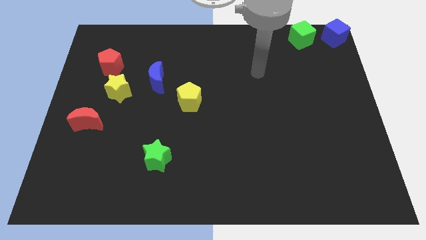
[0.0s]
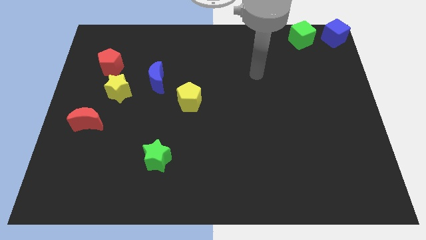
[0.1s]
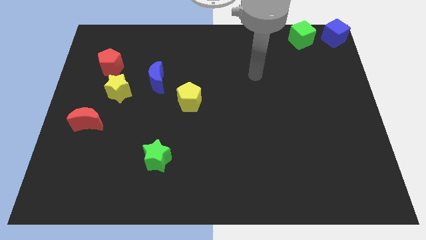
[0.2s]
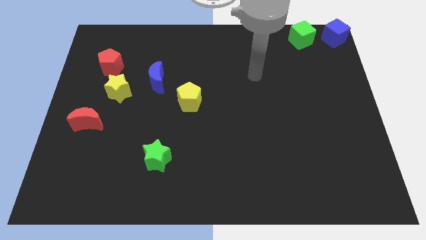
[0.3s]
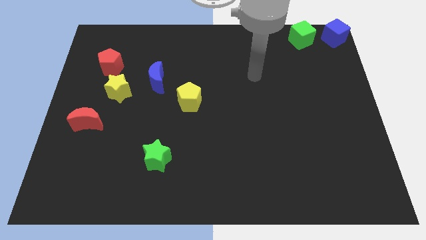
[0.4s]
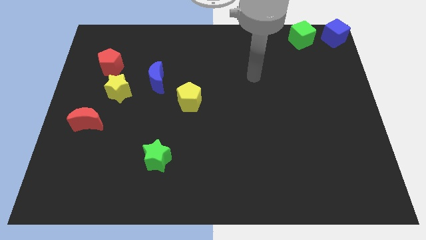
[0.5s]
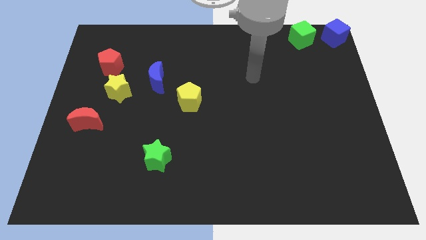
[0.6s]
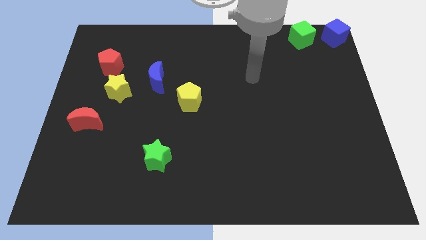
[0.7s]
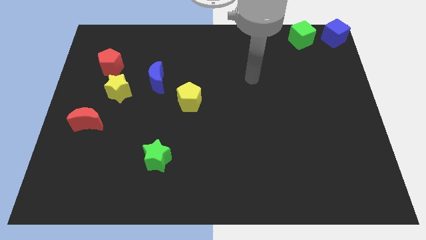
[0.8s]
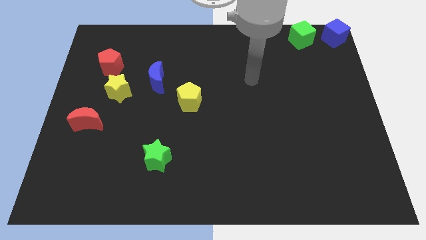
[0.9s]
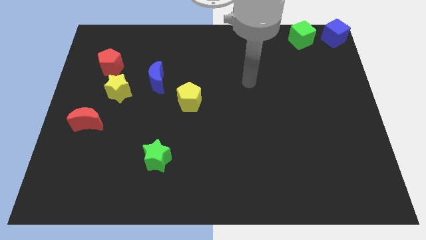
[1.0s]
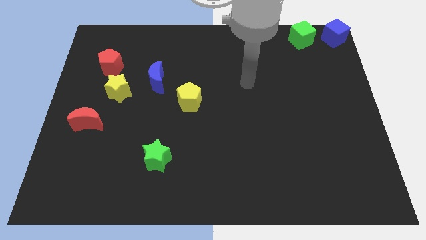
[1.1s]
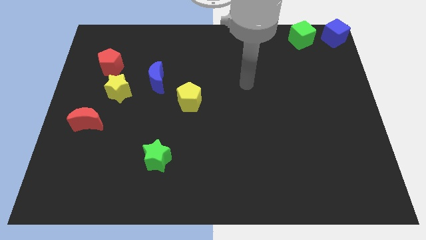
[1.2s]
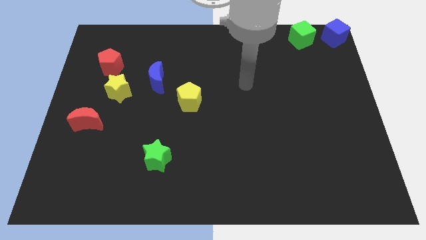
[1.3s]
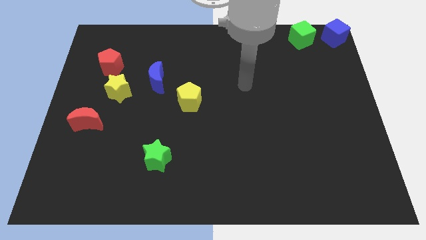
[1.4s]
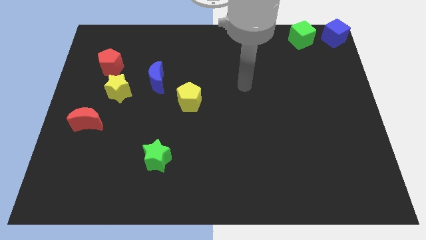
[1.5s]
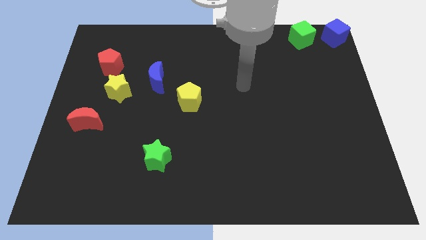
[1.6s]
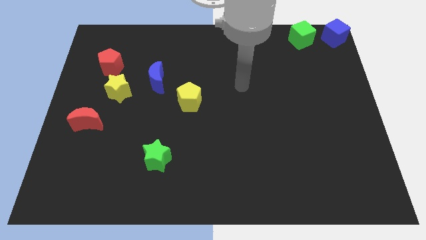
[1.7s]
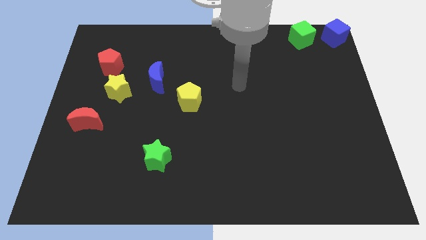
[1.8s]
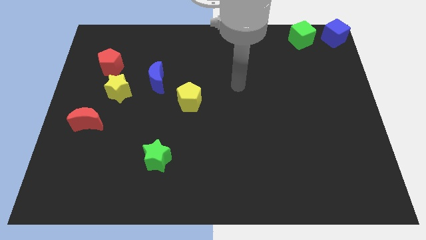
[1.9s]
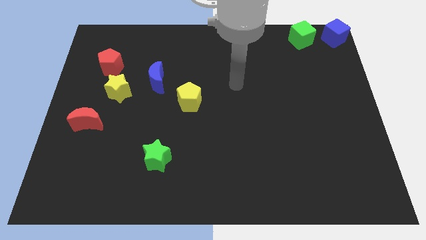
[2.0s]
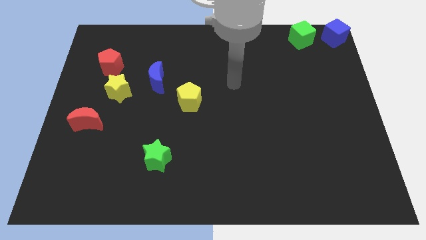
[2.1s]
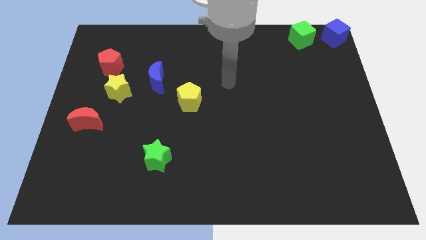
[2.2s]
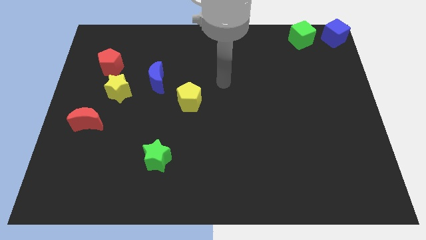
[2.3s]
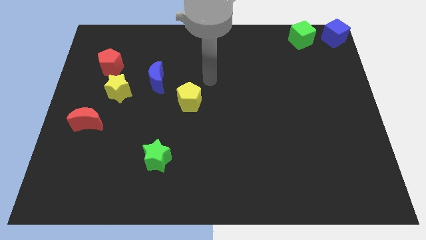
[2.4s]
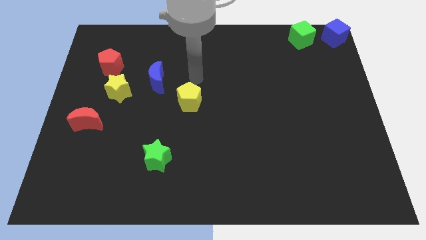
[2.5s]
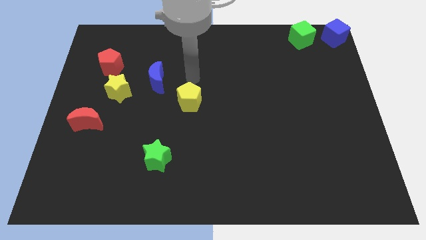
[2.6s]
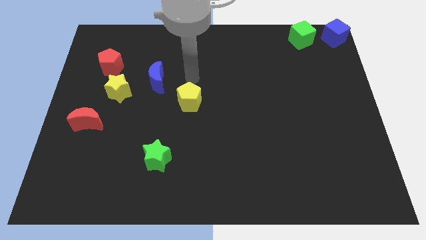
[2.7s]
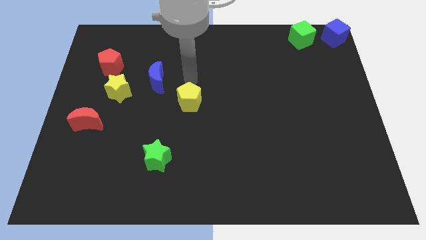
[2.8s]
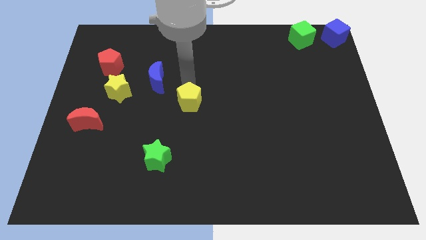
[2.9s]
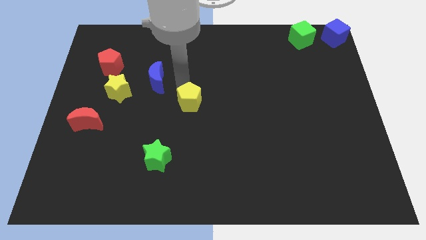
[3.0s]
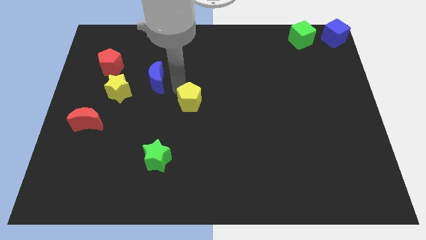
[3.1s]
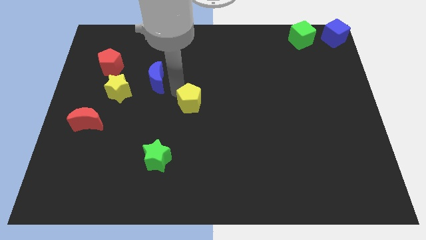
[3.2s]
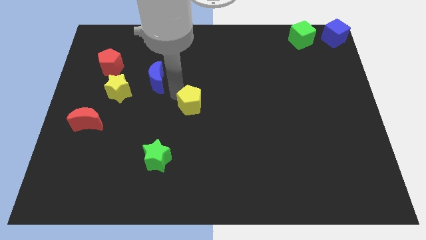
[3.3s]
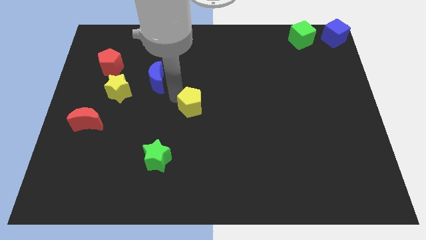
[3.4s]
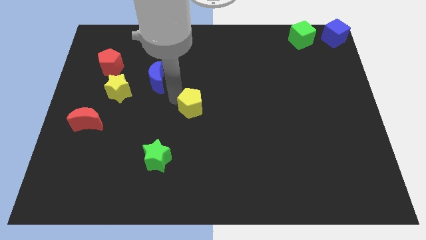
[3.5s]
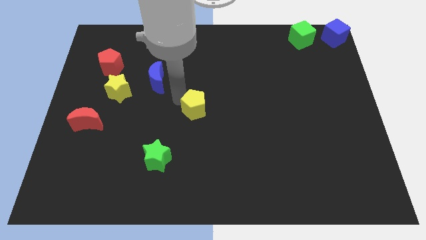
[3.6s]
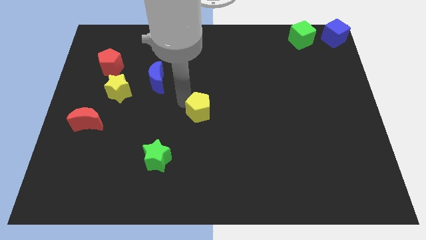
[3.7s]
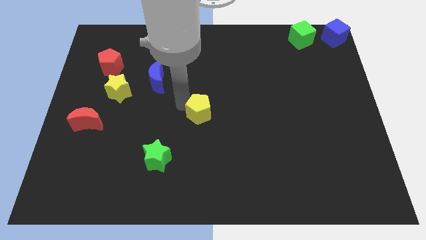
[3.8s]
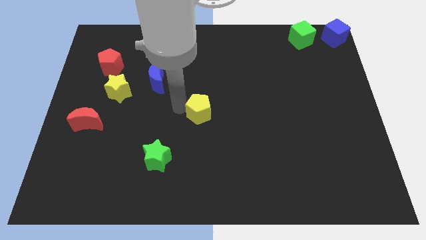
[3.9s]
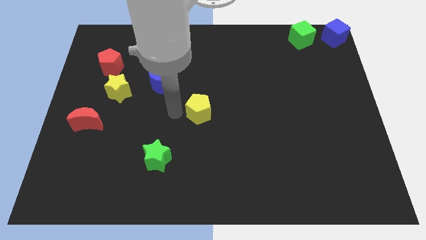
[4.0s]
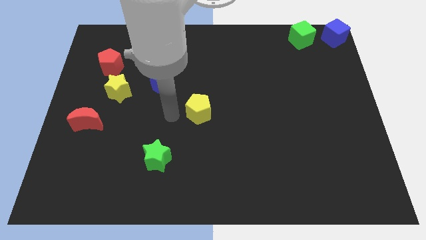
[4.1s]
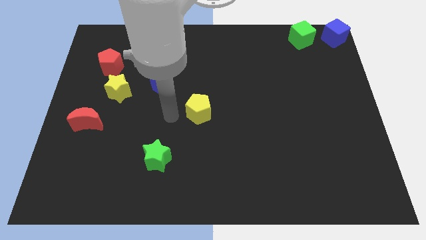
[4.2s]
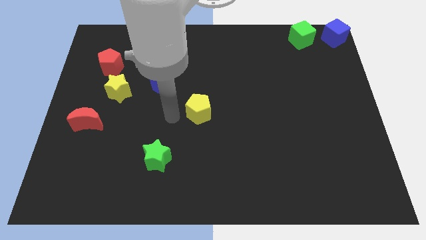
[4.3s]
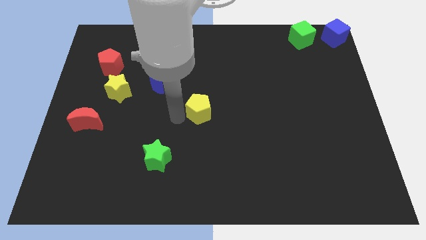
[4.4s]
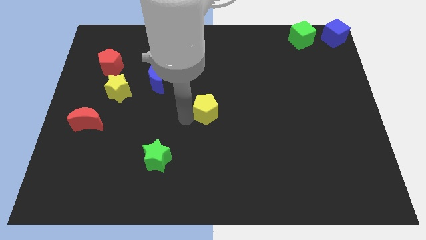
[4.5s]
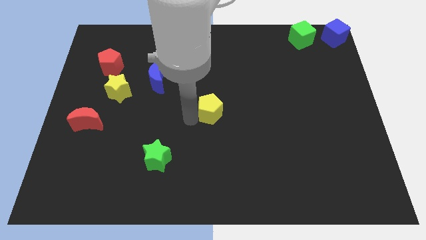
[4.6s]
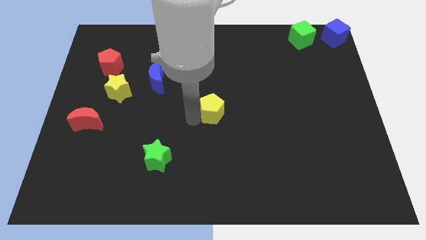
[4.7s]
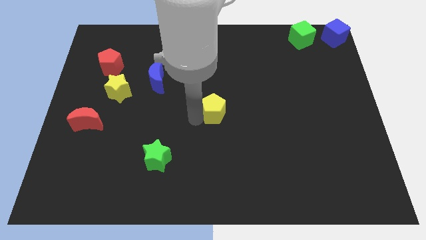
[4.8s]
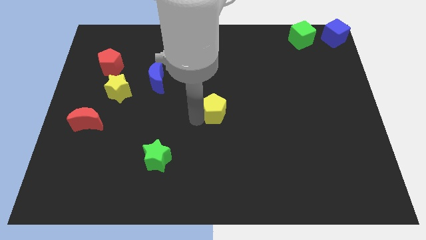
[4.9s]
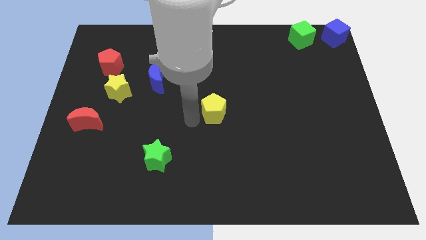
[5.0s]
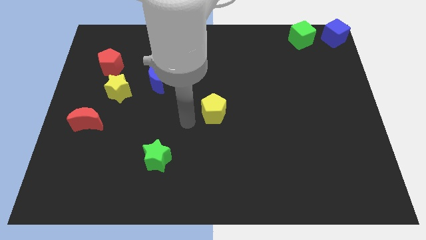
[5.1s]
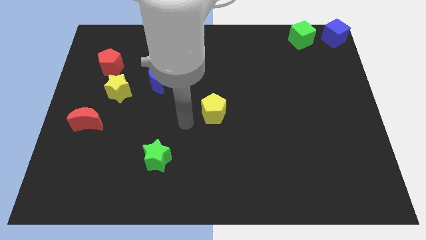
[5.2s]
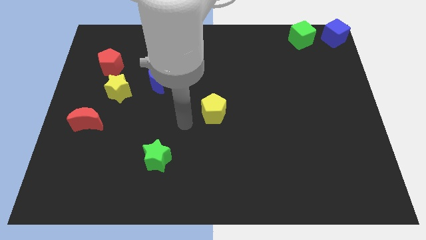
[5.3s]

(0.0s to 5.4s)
push the yellow pentagon to the center of the board

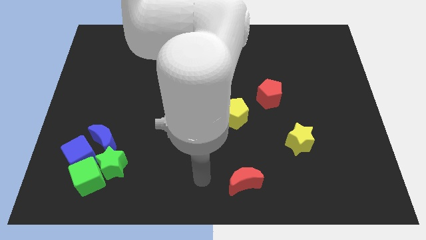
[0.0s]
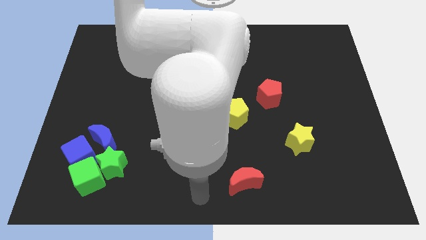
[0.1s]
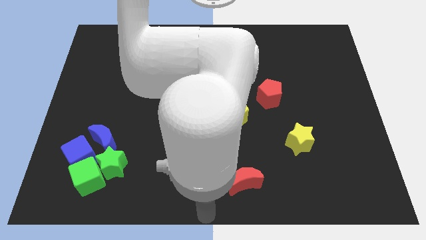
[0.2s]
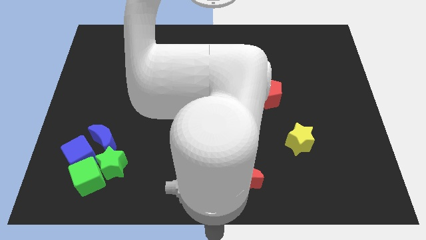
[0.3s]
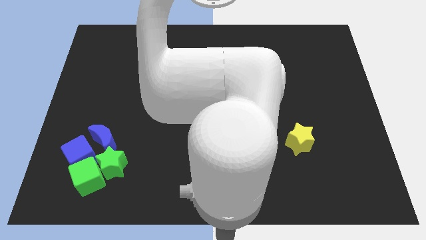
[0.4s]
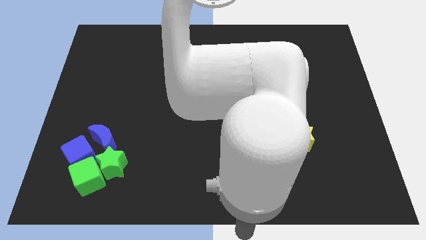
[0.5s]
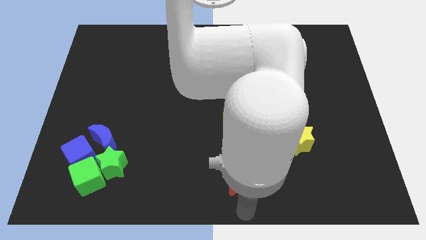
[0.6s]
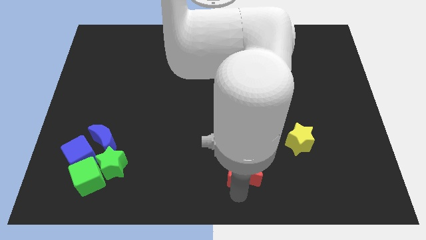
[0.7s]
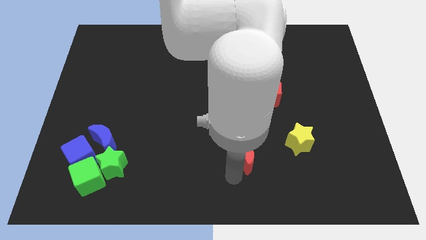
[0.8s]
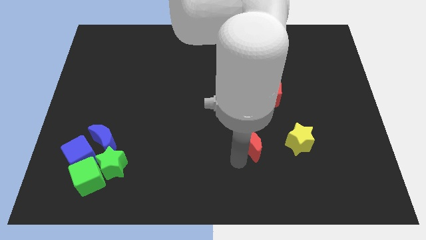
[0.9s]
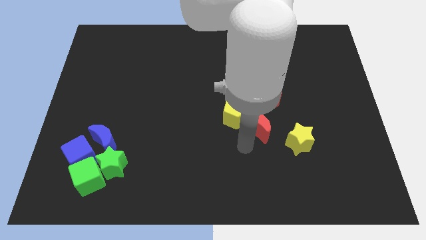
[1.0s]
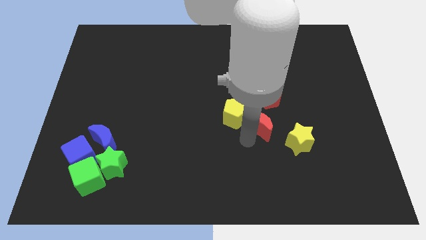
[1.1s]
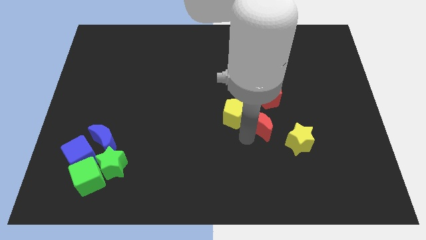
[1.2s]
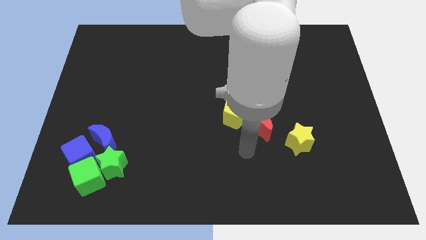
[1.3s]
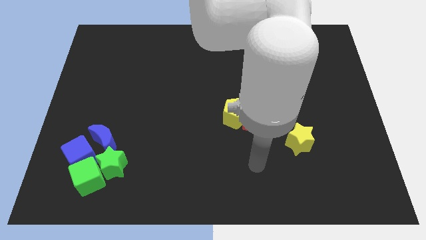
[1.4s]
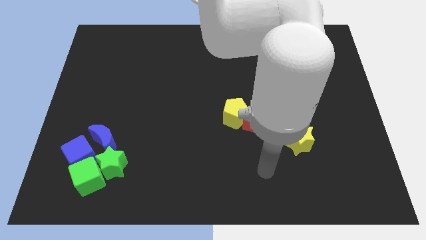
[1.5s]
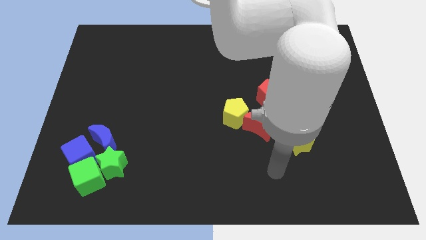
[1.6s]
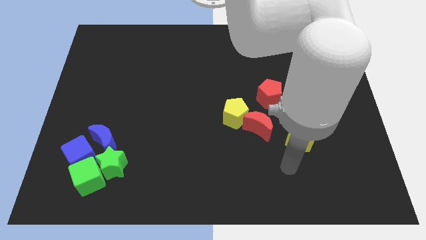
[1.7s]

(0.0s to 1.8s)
place the red moon below the yellow pentagon

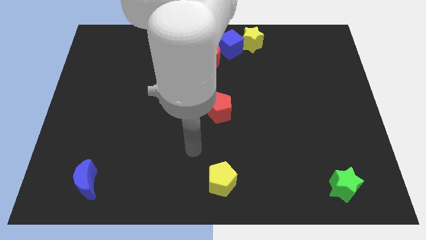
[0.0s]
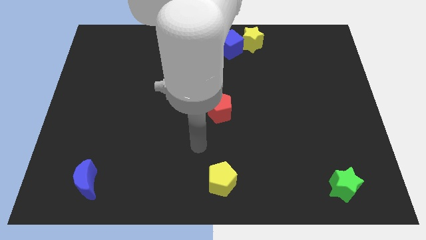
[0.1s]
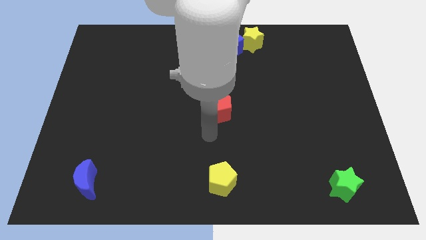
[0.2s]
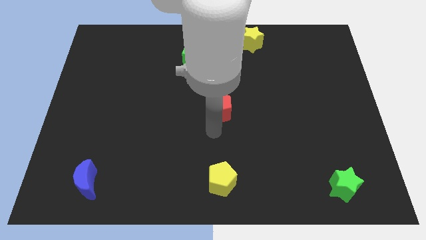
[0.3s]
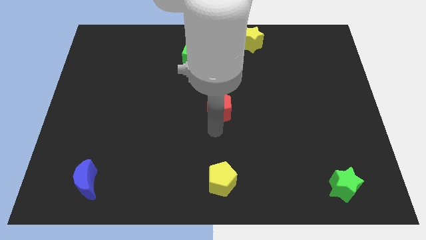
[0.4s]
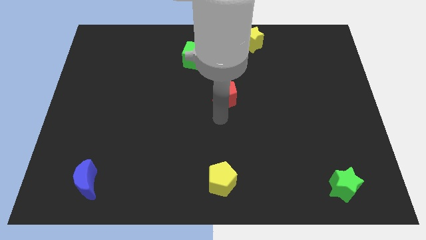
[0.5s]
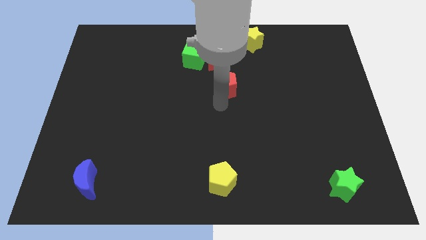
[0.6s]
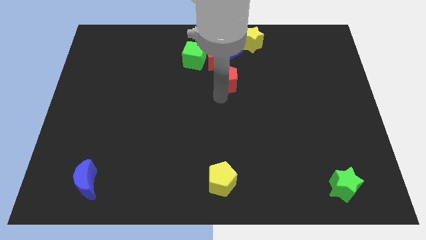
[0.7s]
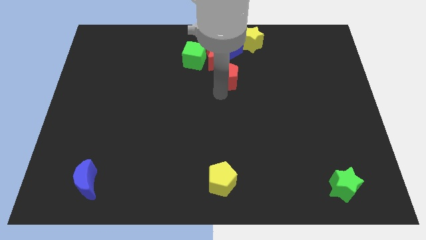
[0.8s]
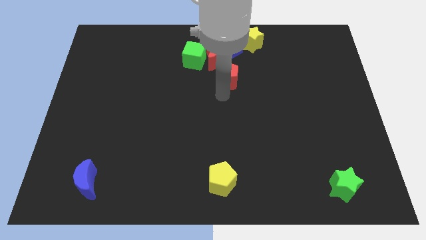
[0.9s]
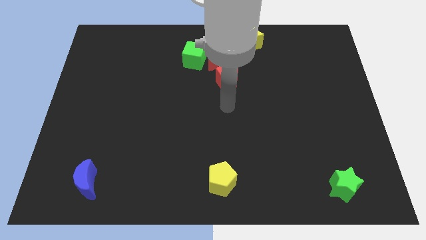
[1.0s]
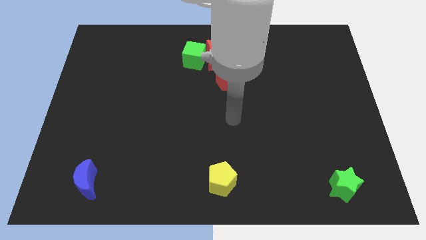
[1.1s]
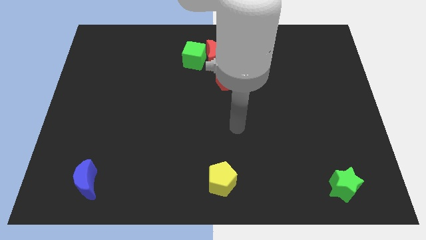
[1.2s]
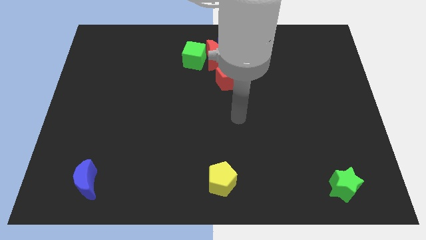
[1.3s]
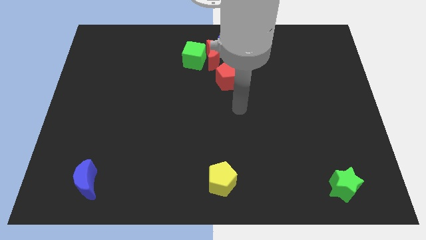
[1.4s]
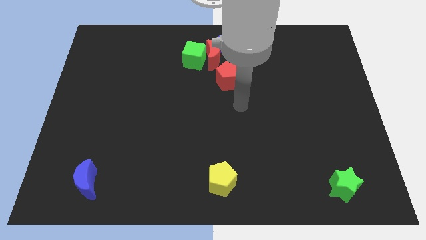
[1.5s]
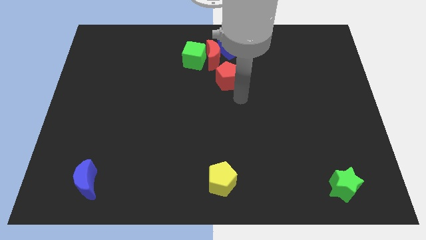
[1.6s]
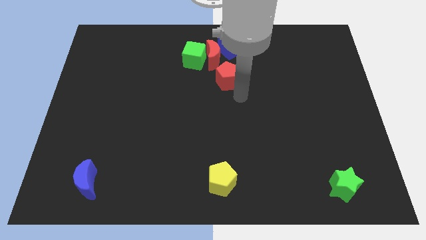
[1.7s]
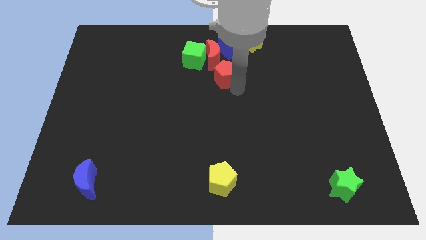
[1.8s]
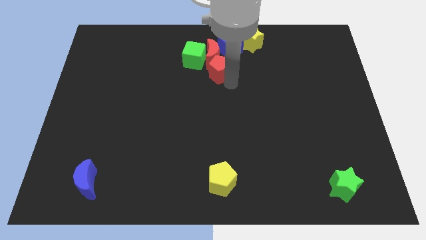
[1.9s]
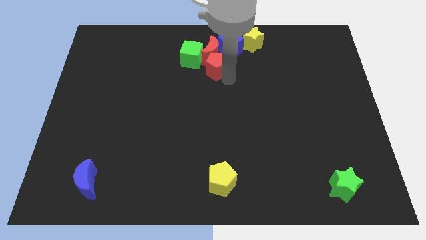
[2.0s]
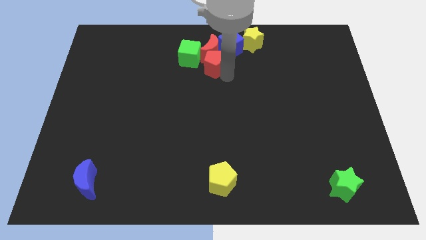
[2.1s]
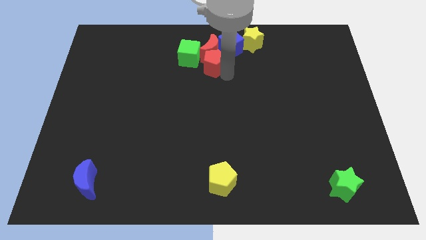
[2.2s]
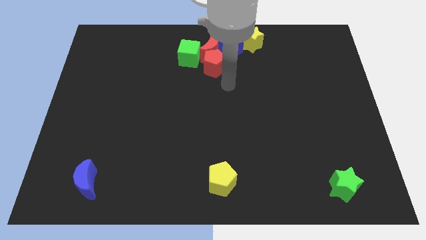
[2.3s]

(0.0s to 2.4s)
move the red pentagon into the red crescent at the bottom
